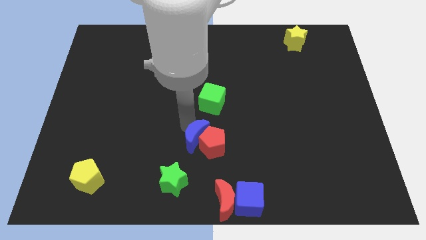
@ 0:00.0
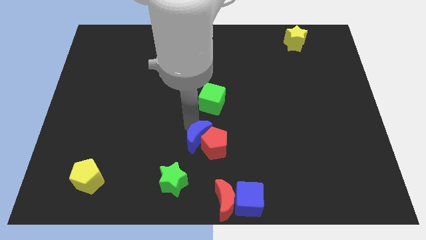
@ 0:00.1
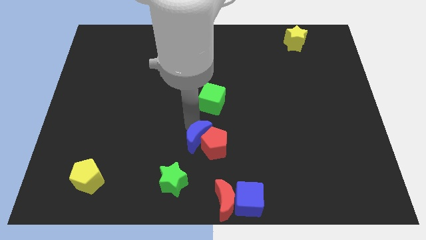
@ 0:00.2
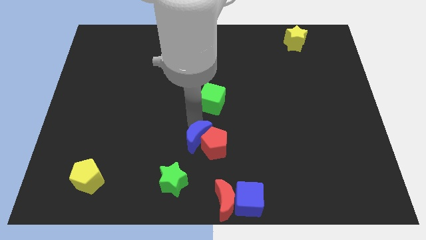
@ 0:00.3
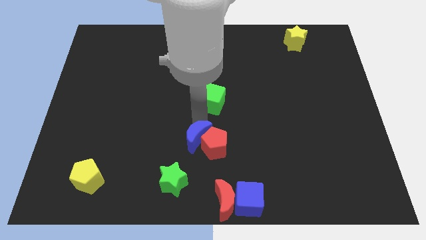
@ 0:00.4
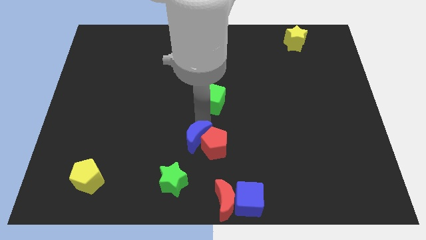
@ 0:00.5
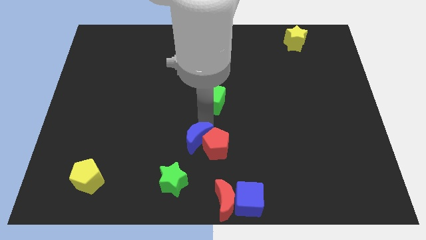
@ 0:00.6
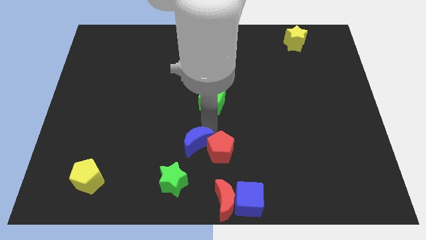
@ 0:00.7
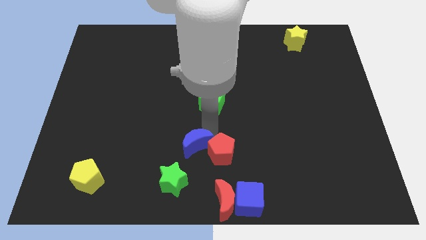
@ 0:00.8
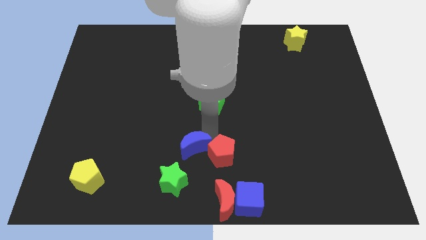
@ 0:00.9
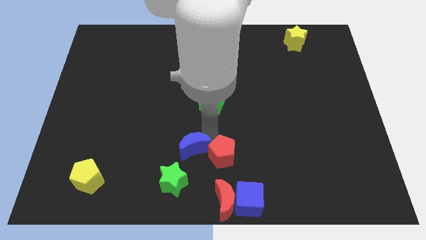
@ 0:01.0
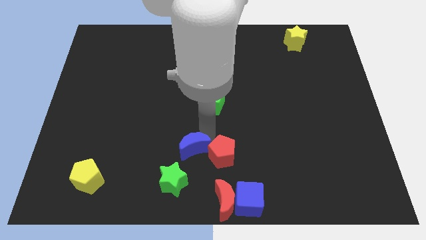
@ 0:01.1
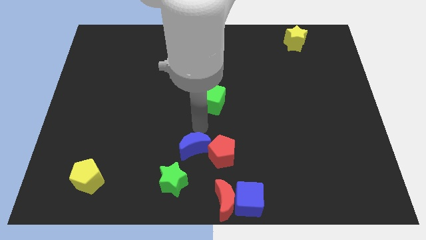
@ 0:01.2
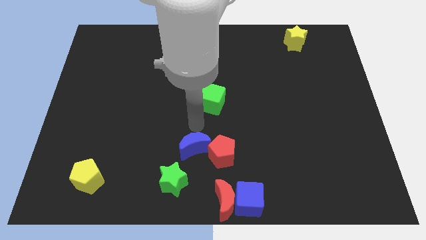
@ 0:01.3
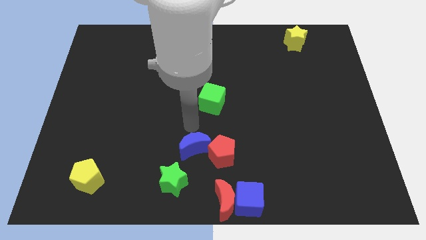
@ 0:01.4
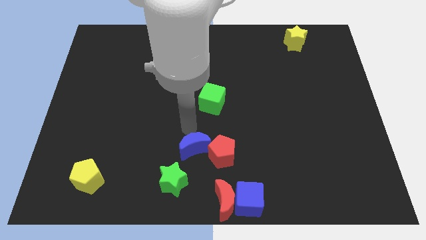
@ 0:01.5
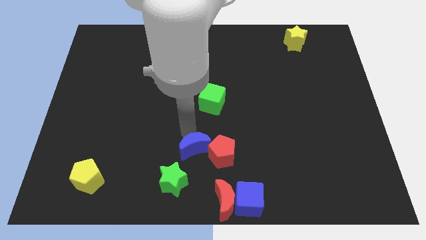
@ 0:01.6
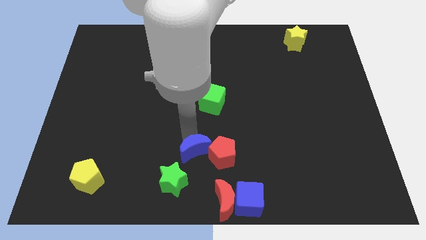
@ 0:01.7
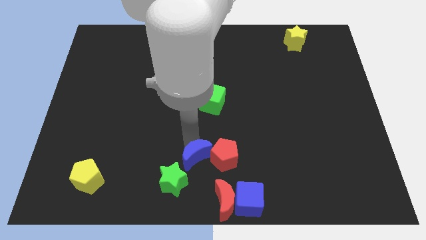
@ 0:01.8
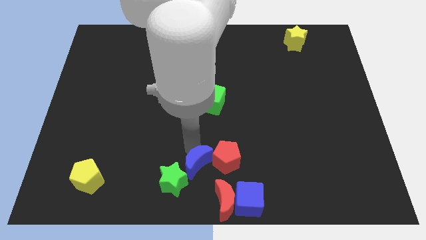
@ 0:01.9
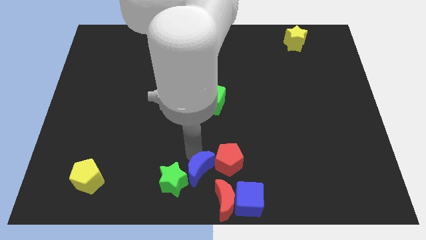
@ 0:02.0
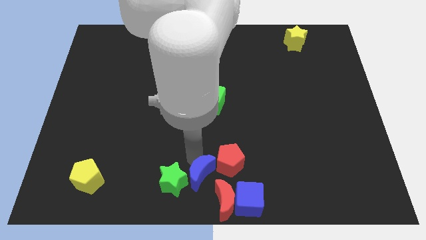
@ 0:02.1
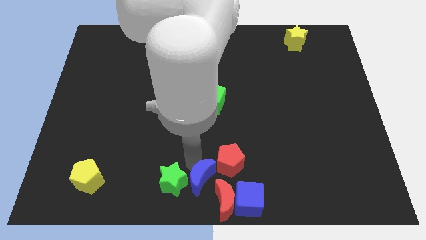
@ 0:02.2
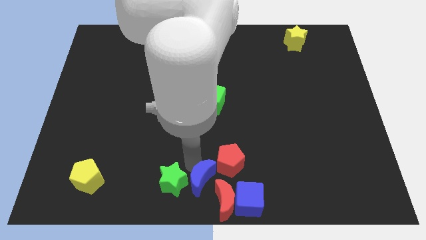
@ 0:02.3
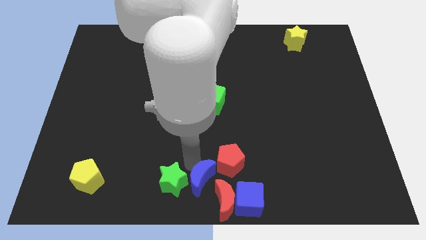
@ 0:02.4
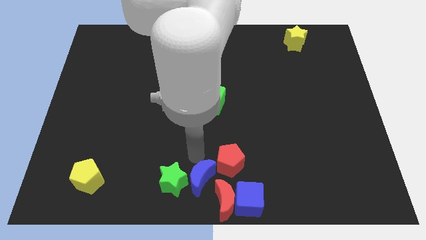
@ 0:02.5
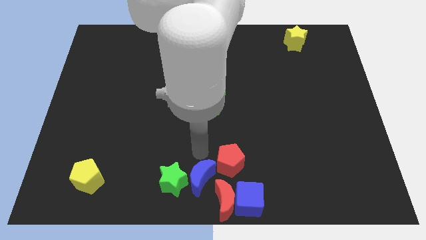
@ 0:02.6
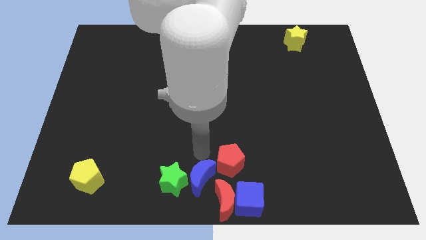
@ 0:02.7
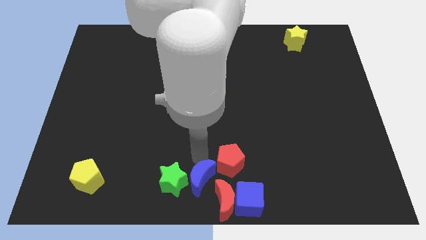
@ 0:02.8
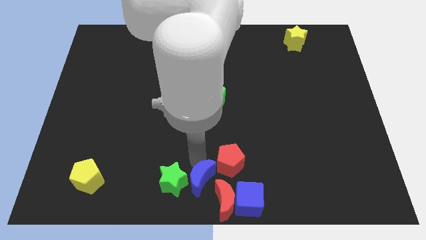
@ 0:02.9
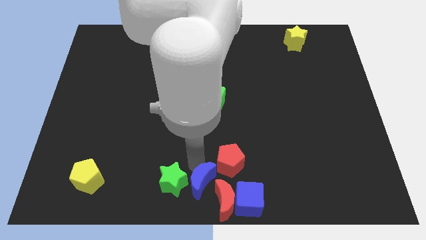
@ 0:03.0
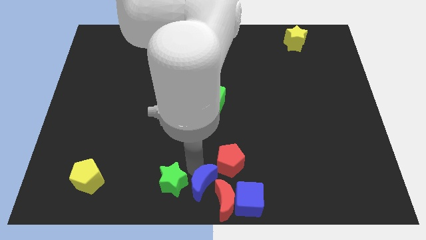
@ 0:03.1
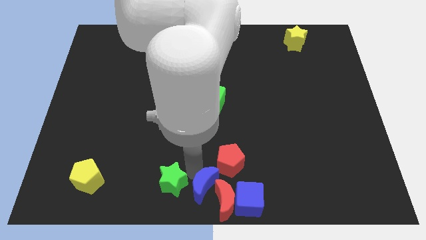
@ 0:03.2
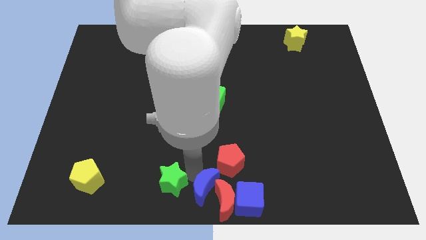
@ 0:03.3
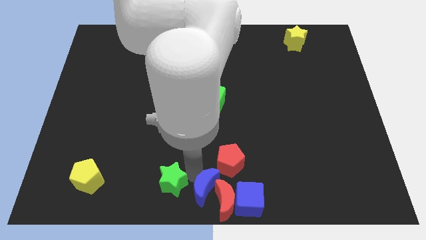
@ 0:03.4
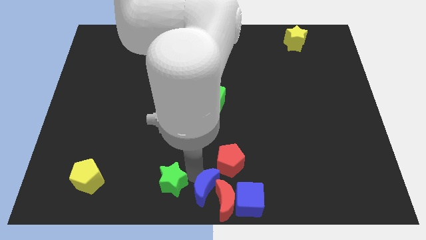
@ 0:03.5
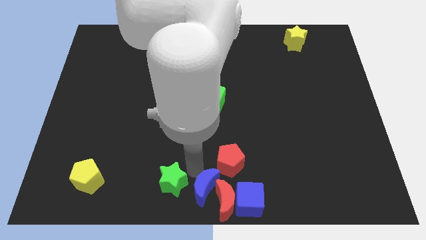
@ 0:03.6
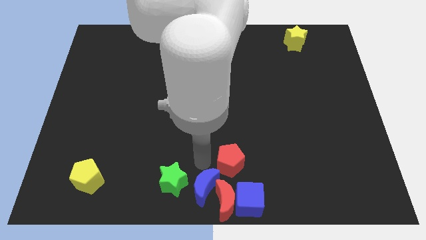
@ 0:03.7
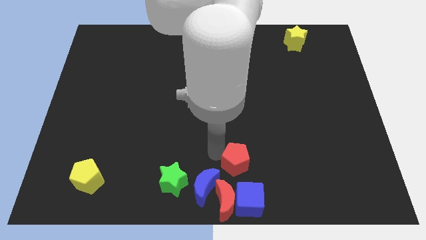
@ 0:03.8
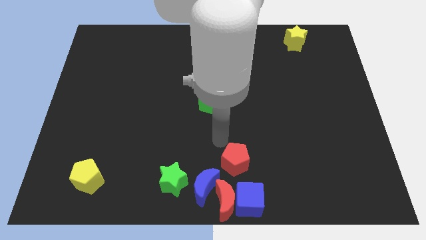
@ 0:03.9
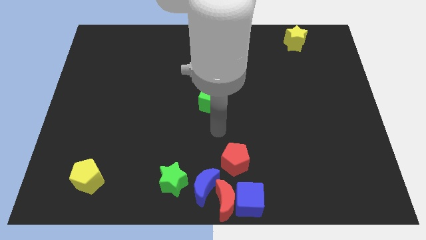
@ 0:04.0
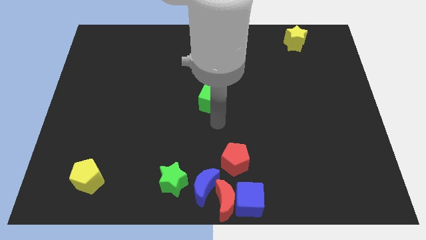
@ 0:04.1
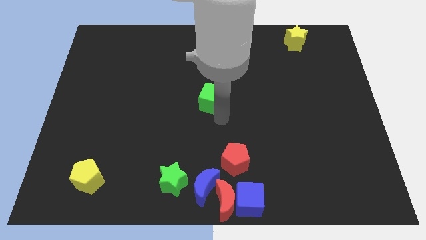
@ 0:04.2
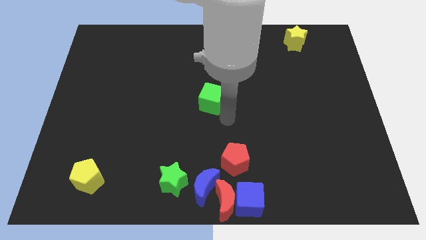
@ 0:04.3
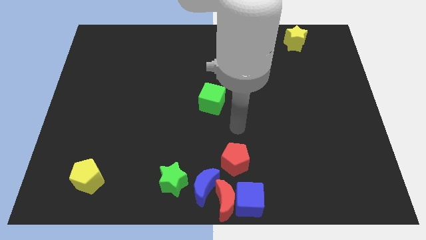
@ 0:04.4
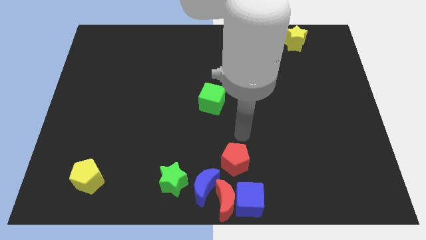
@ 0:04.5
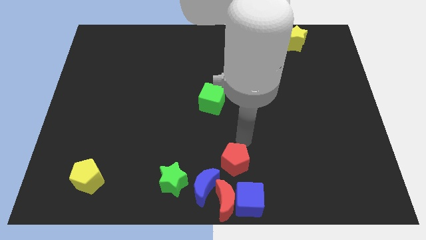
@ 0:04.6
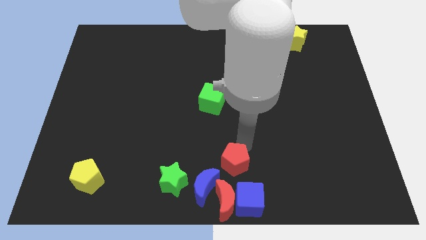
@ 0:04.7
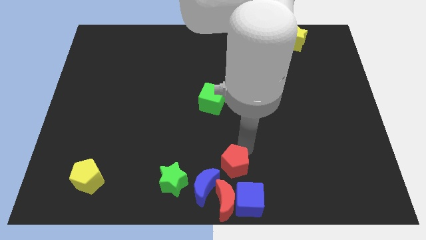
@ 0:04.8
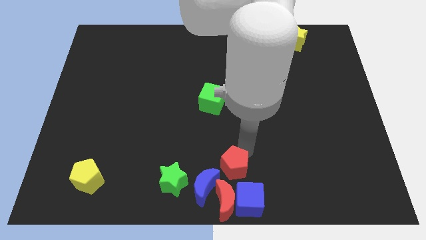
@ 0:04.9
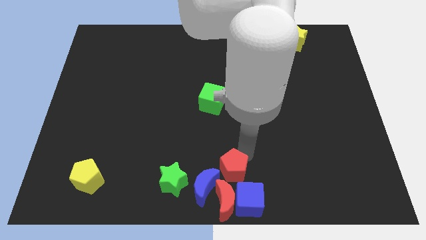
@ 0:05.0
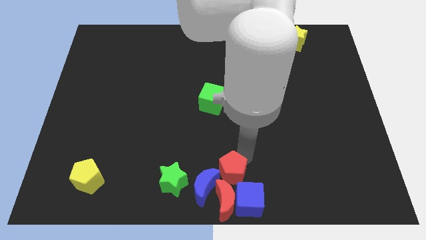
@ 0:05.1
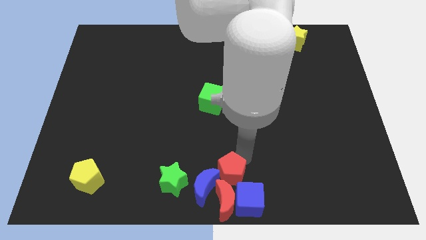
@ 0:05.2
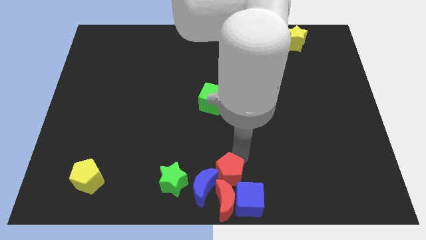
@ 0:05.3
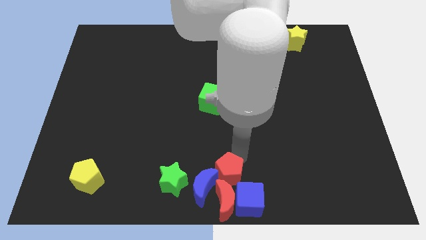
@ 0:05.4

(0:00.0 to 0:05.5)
slide the blue crescent and red pentagon into the group of blocks at the bottom center of table

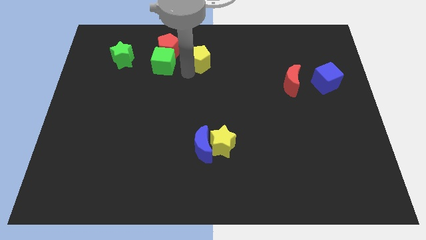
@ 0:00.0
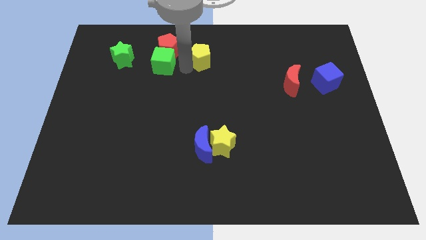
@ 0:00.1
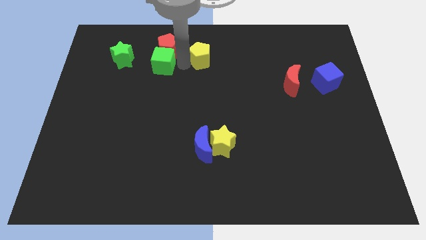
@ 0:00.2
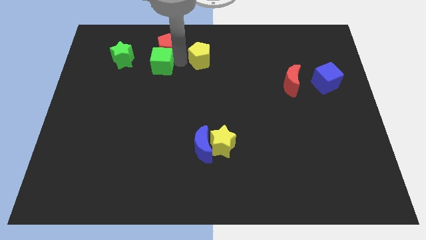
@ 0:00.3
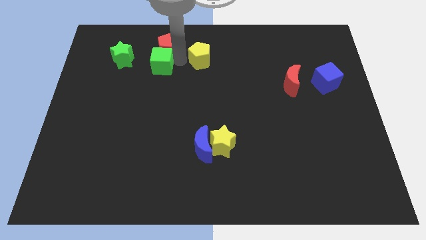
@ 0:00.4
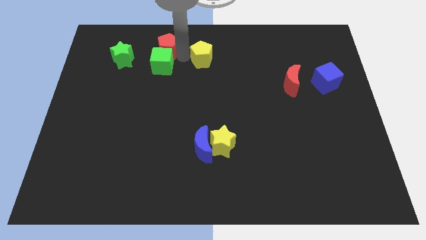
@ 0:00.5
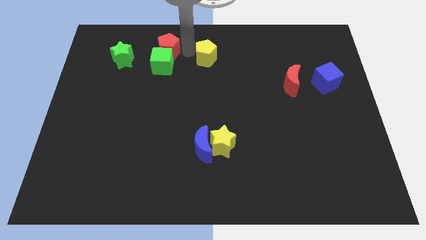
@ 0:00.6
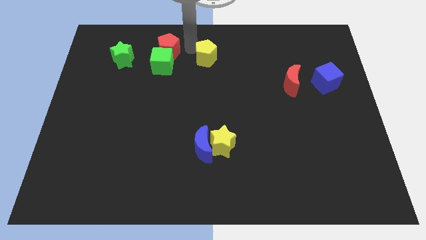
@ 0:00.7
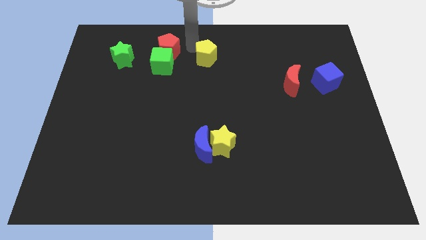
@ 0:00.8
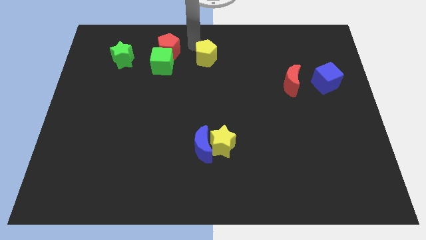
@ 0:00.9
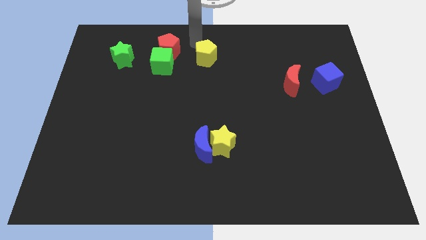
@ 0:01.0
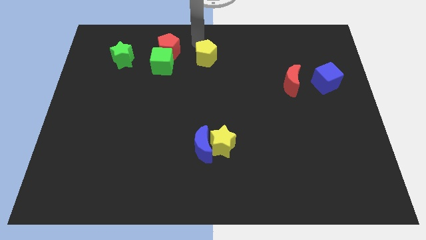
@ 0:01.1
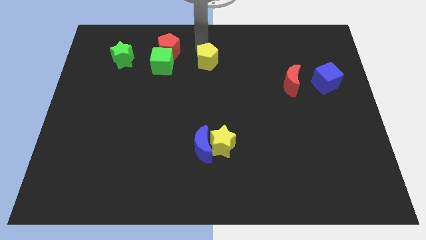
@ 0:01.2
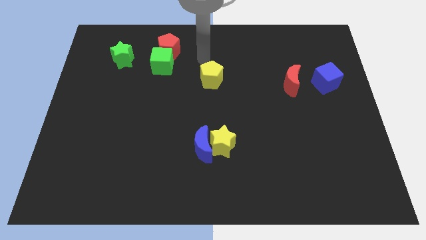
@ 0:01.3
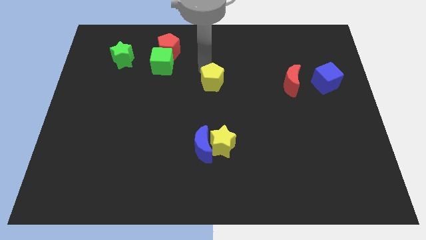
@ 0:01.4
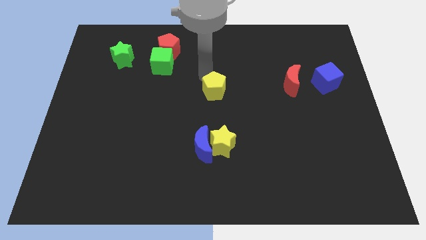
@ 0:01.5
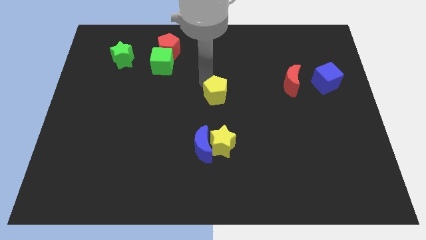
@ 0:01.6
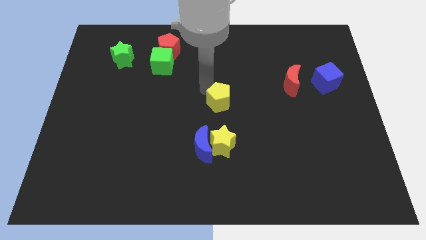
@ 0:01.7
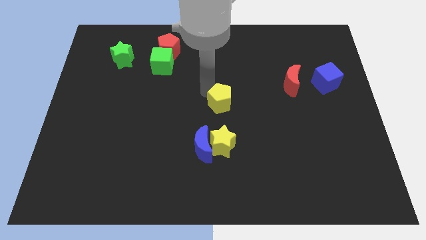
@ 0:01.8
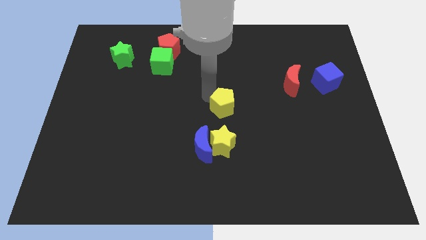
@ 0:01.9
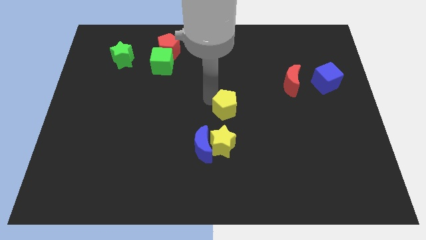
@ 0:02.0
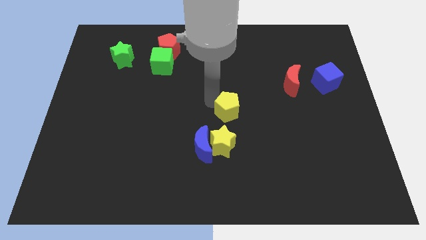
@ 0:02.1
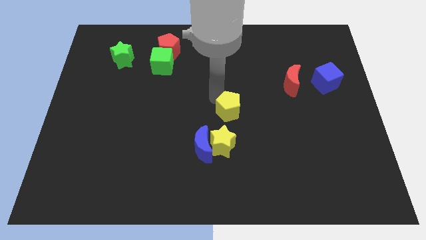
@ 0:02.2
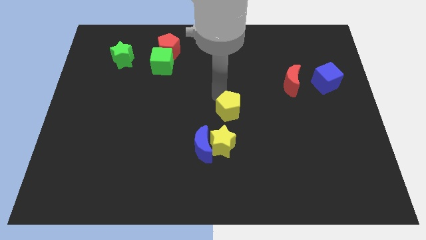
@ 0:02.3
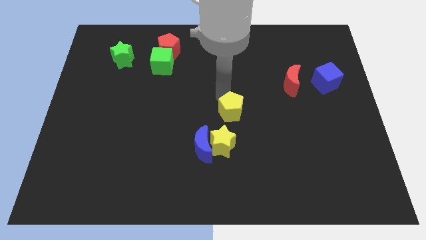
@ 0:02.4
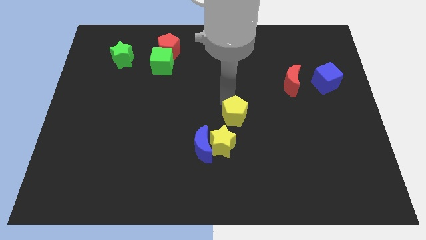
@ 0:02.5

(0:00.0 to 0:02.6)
move the yellow pentagon to the top of the yellow star

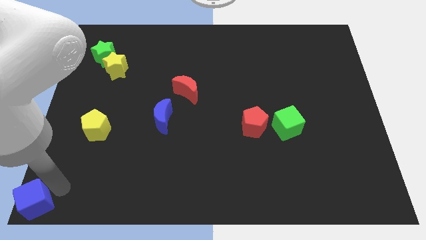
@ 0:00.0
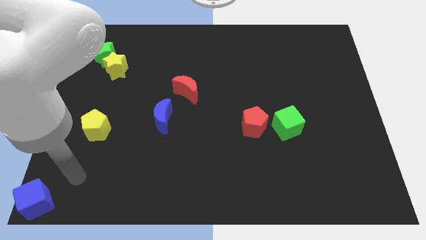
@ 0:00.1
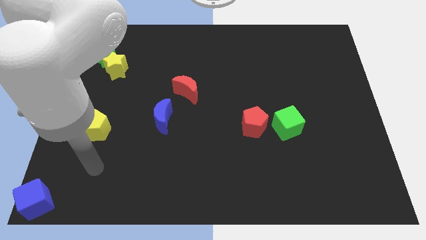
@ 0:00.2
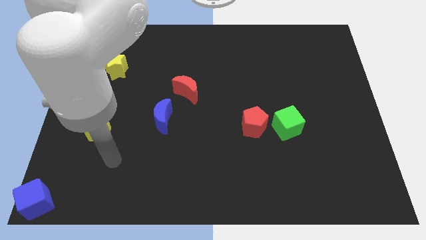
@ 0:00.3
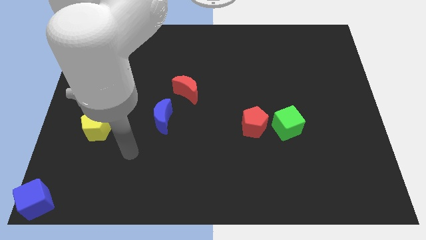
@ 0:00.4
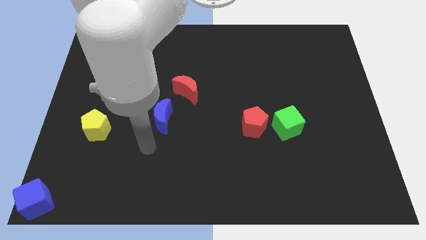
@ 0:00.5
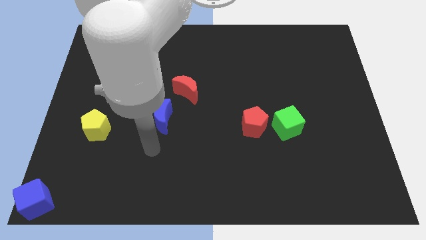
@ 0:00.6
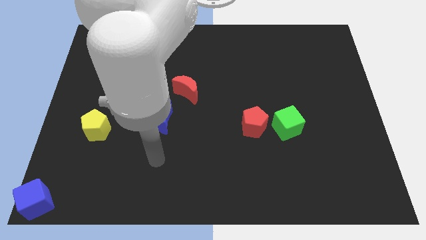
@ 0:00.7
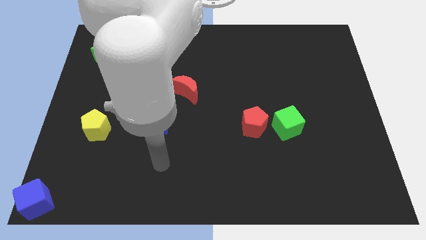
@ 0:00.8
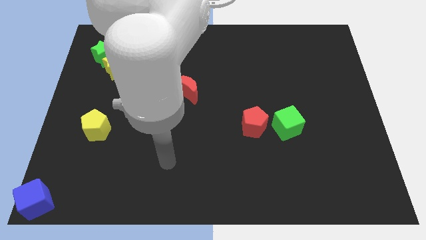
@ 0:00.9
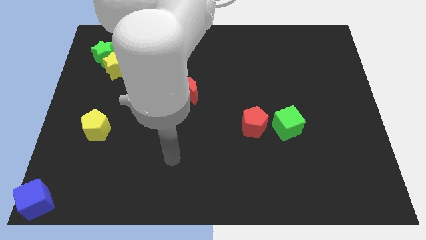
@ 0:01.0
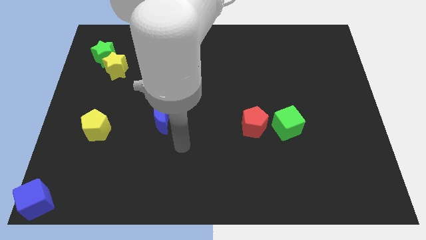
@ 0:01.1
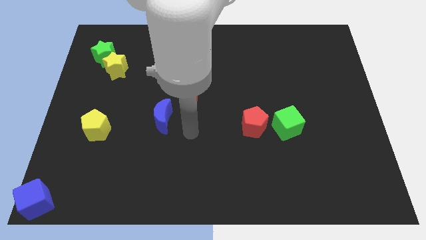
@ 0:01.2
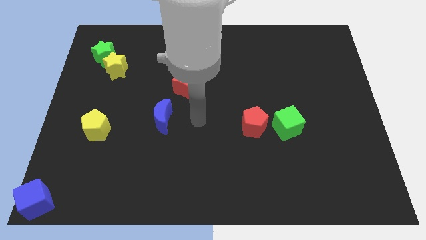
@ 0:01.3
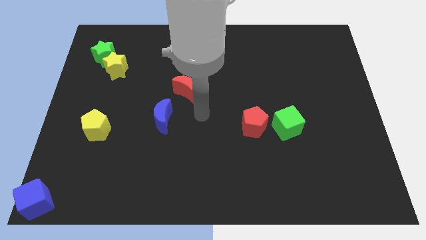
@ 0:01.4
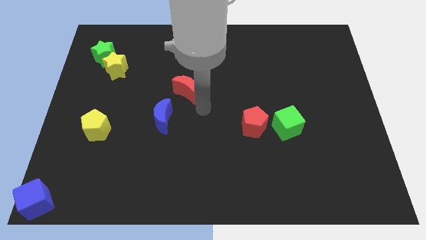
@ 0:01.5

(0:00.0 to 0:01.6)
move your arm away from the blue cube
